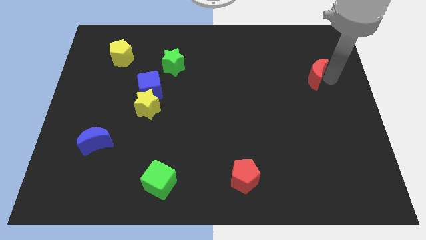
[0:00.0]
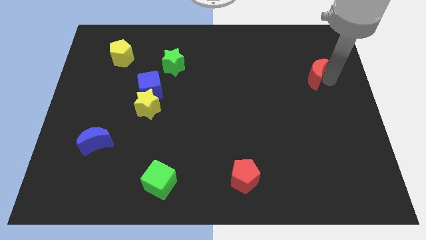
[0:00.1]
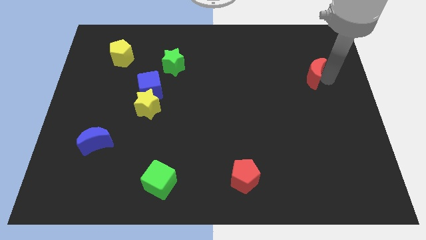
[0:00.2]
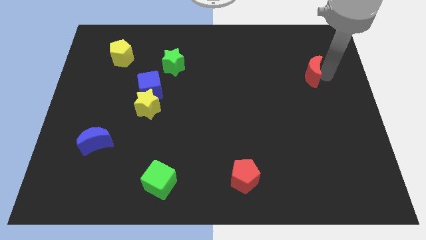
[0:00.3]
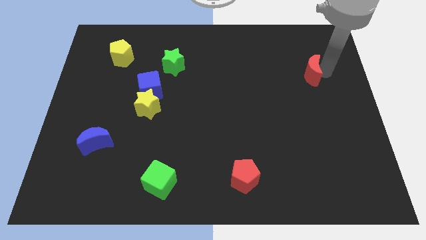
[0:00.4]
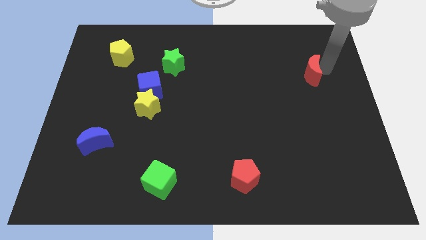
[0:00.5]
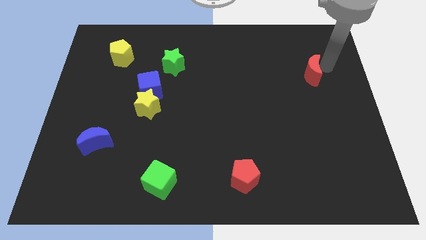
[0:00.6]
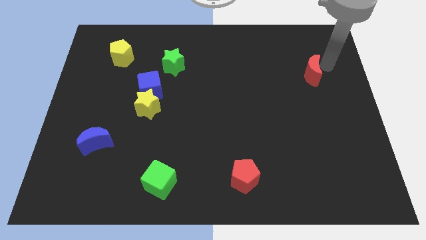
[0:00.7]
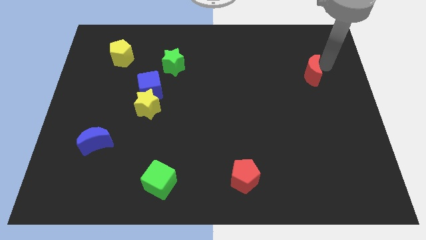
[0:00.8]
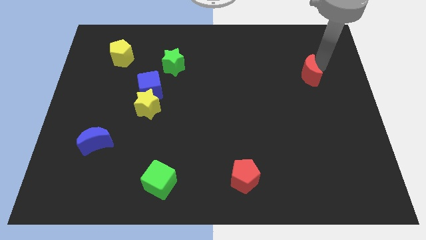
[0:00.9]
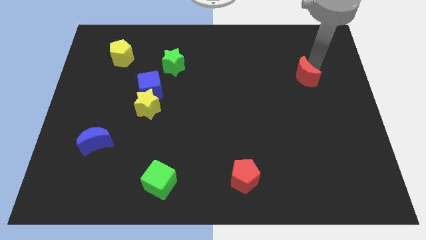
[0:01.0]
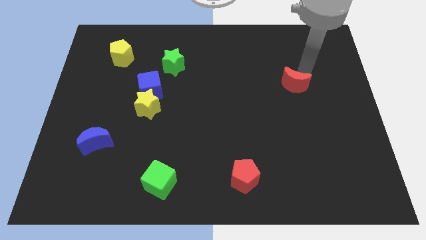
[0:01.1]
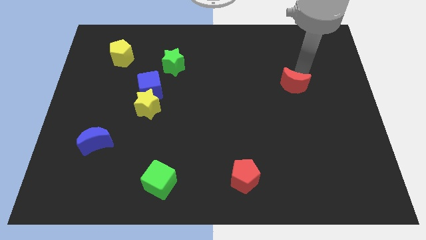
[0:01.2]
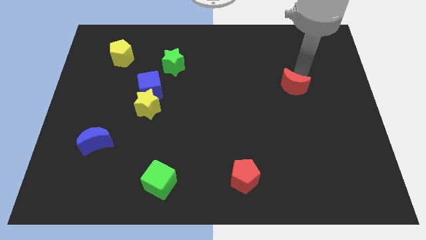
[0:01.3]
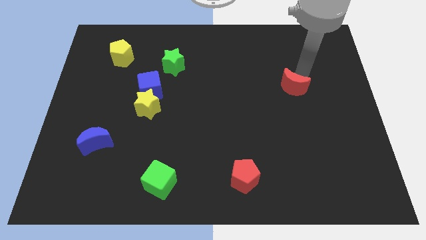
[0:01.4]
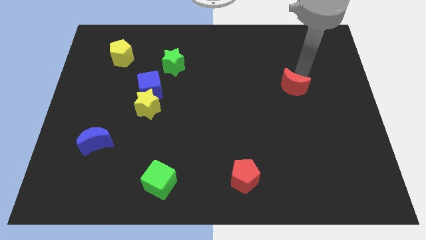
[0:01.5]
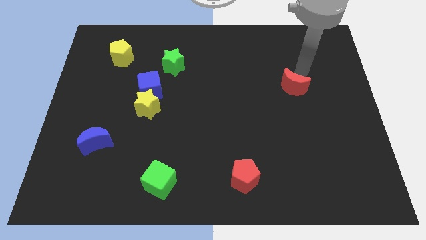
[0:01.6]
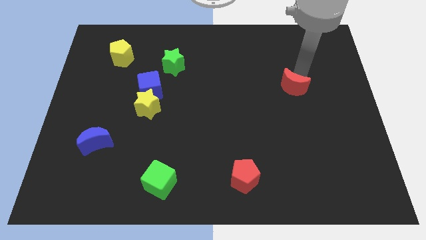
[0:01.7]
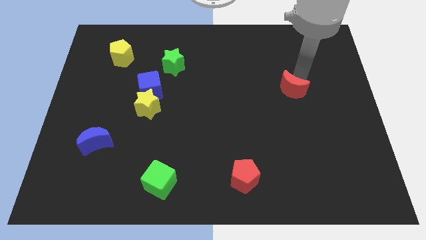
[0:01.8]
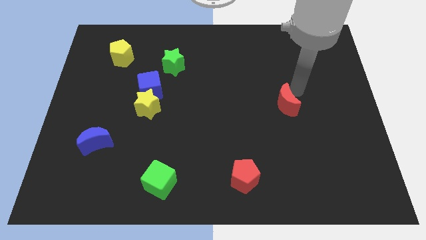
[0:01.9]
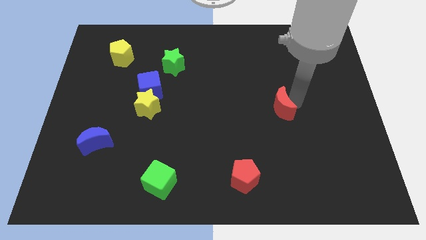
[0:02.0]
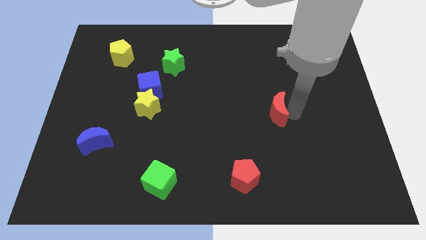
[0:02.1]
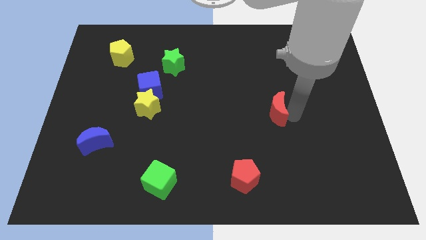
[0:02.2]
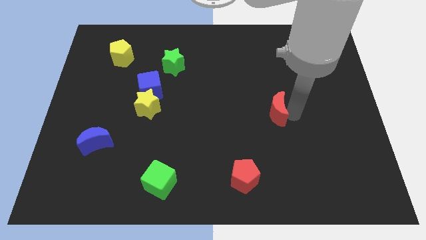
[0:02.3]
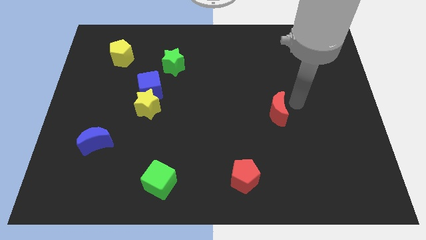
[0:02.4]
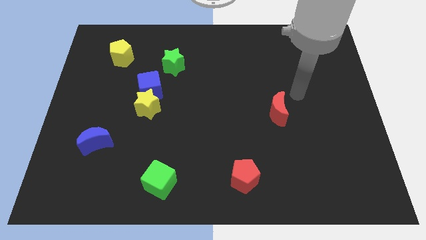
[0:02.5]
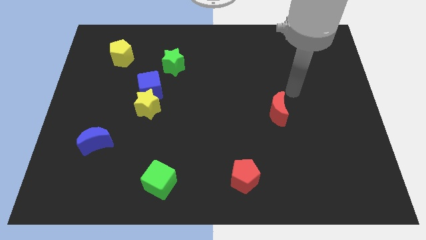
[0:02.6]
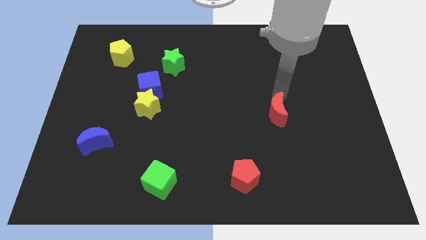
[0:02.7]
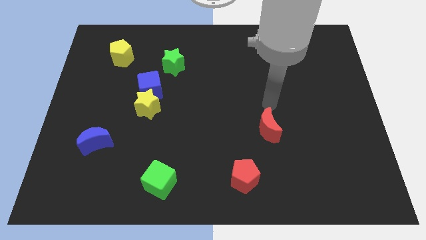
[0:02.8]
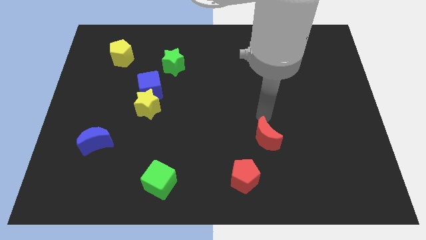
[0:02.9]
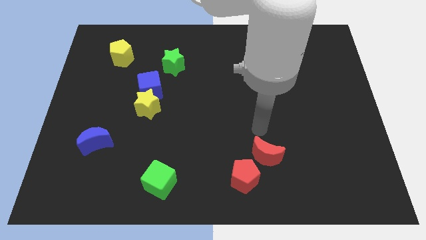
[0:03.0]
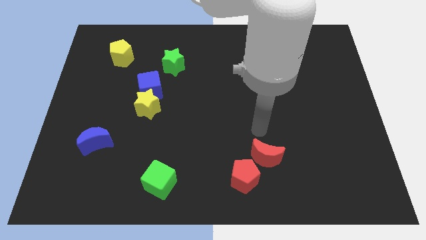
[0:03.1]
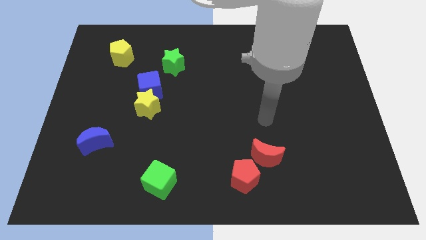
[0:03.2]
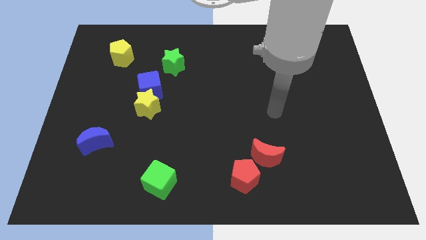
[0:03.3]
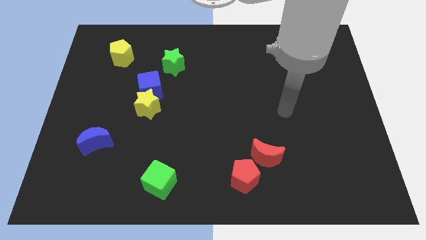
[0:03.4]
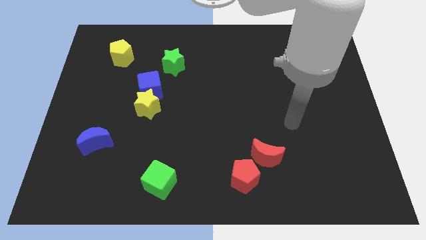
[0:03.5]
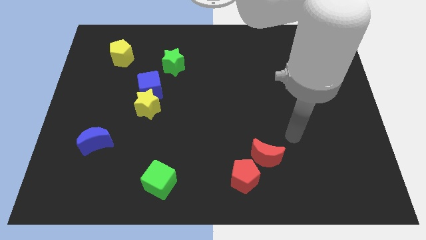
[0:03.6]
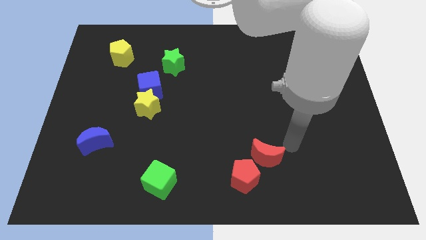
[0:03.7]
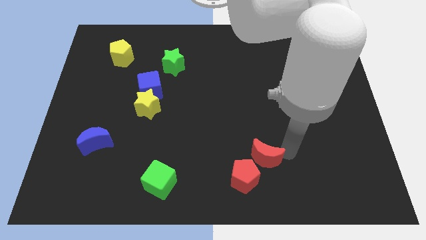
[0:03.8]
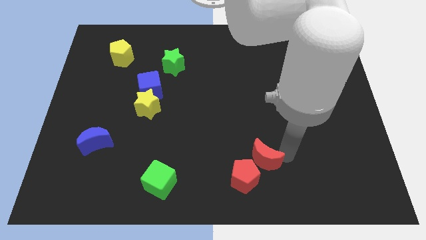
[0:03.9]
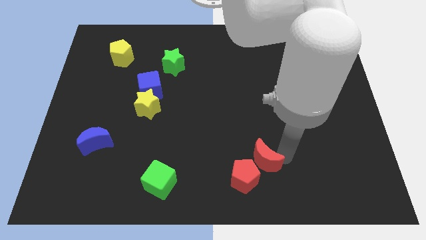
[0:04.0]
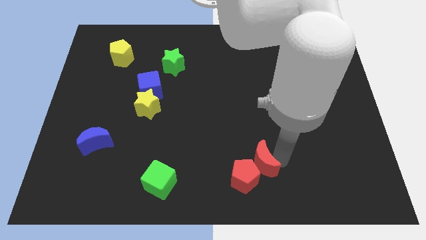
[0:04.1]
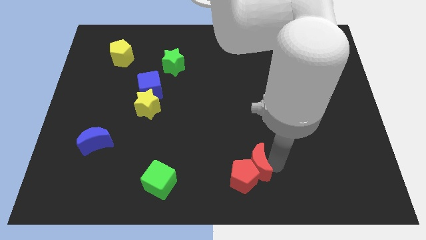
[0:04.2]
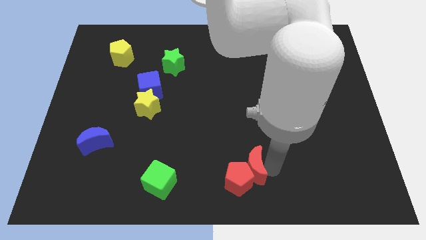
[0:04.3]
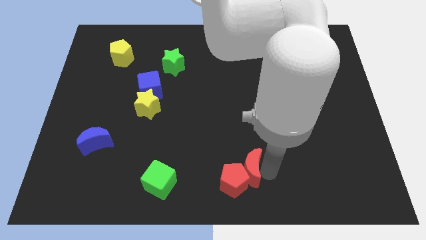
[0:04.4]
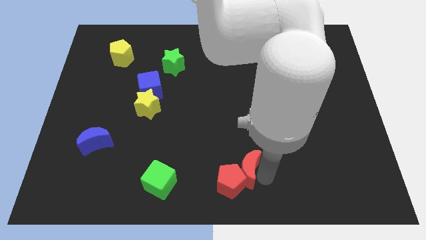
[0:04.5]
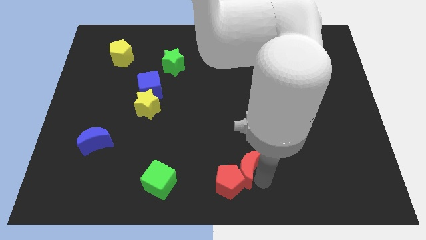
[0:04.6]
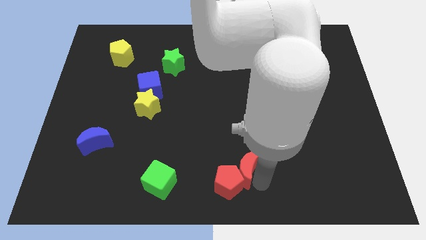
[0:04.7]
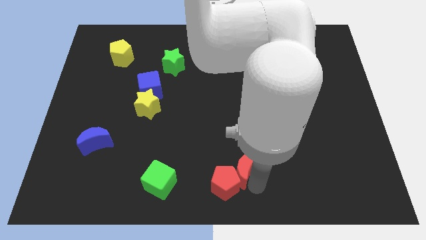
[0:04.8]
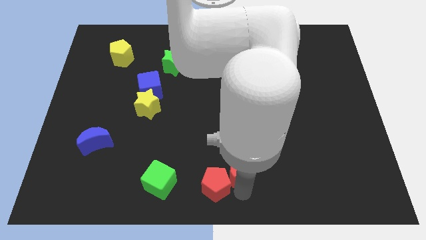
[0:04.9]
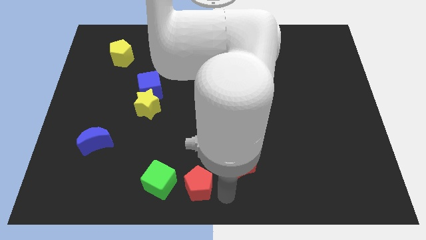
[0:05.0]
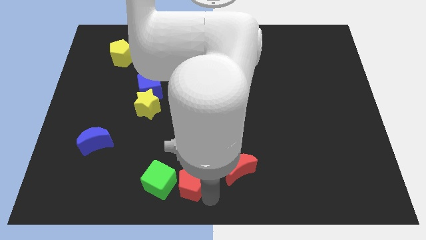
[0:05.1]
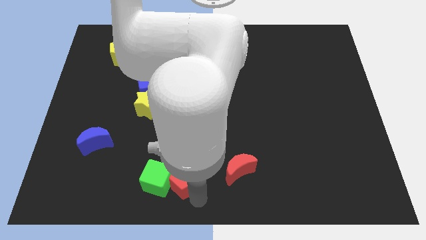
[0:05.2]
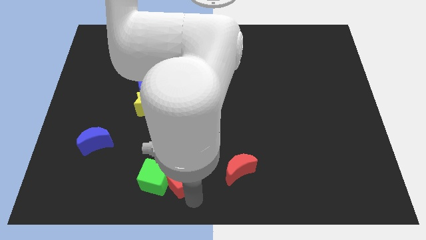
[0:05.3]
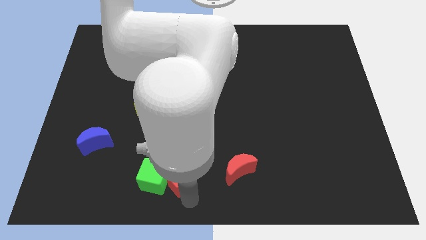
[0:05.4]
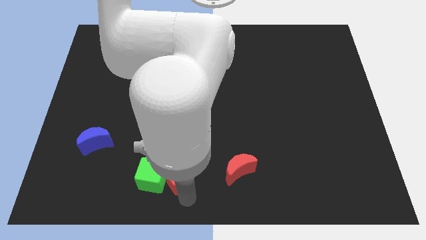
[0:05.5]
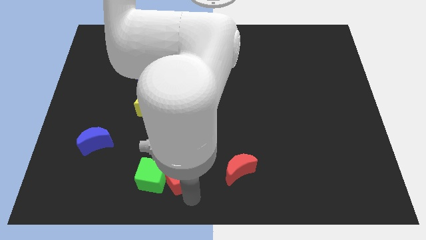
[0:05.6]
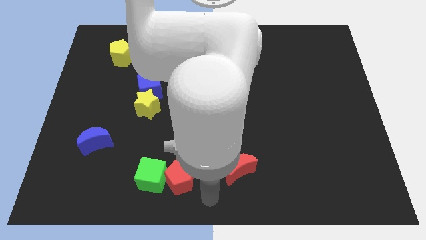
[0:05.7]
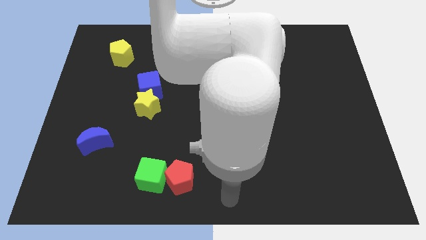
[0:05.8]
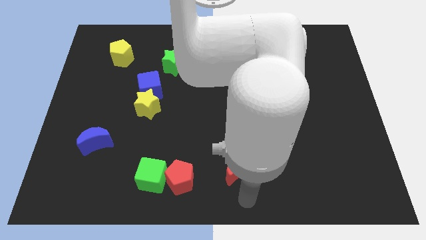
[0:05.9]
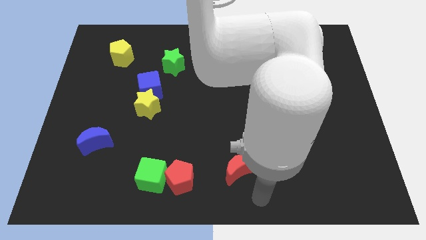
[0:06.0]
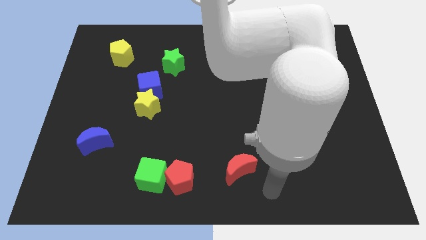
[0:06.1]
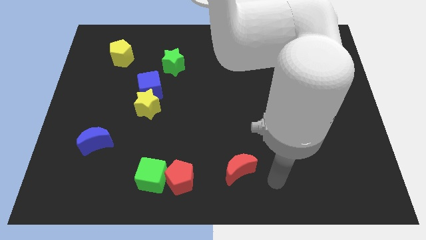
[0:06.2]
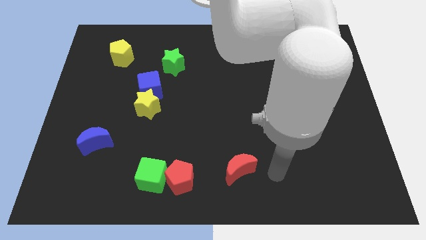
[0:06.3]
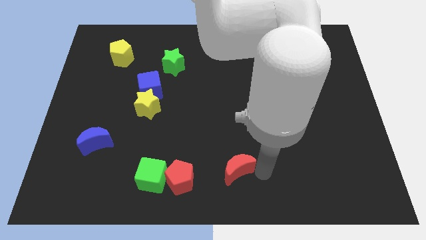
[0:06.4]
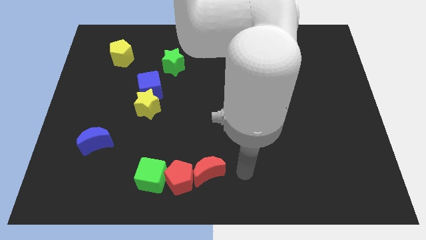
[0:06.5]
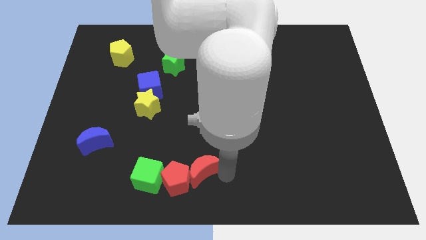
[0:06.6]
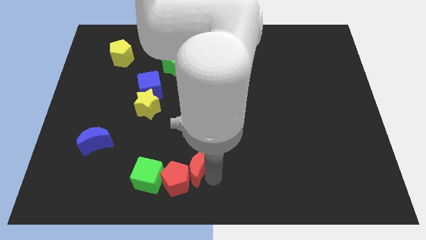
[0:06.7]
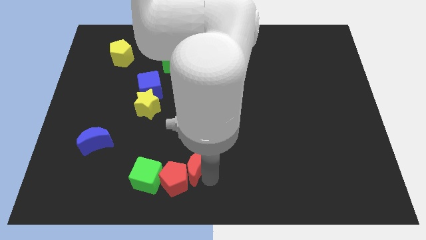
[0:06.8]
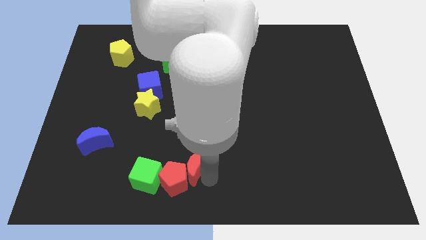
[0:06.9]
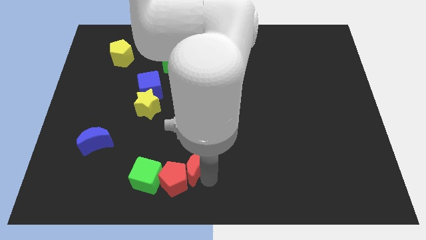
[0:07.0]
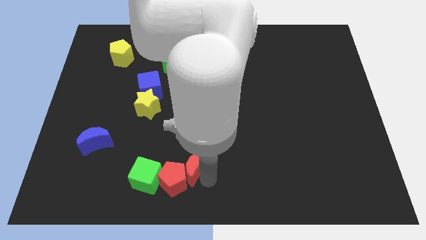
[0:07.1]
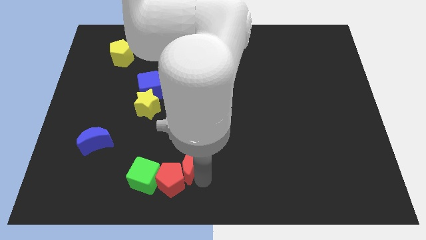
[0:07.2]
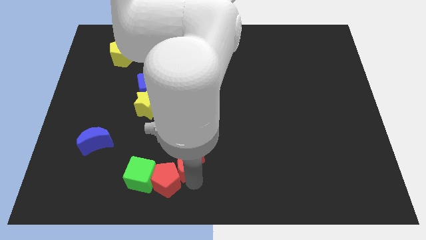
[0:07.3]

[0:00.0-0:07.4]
push the red crescent into the red pentagon

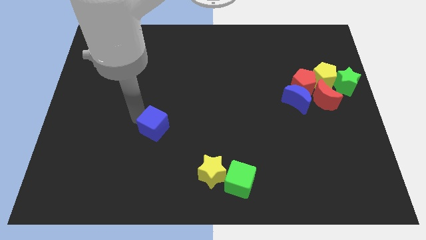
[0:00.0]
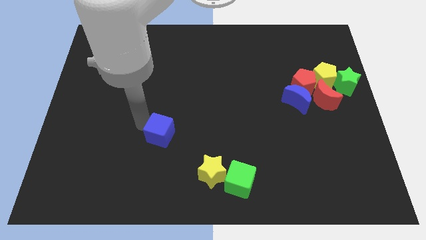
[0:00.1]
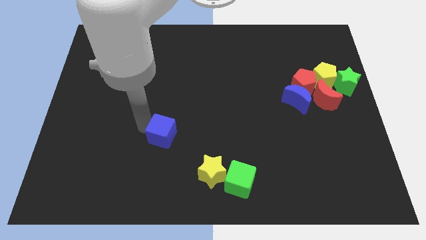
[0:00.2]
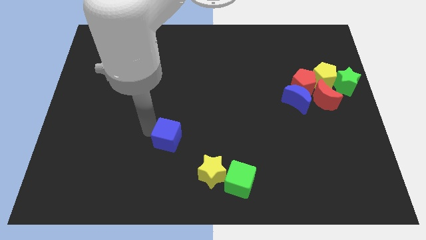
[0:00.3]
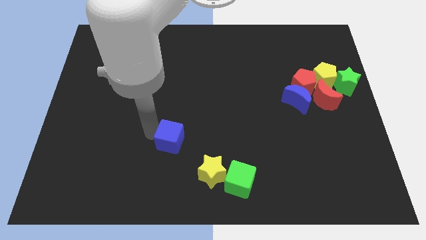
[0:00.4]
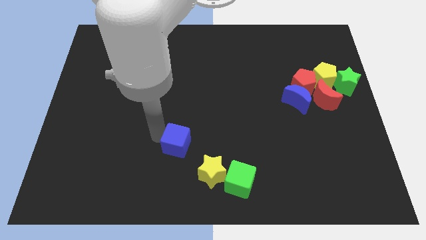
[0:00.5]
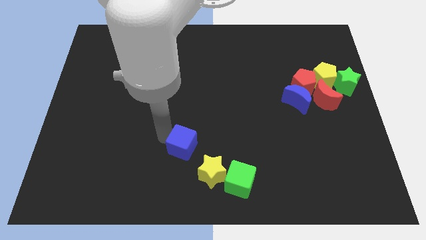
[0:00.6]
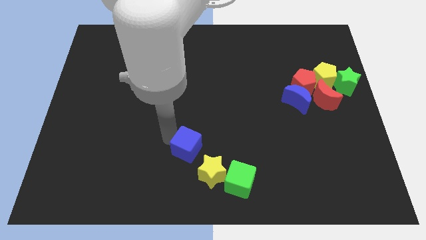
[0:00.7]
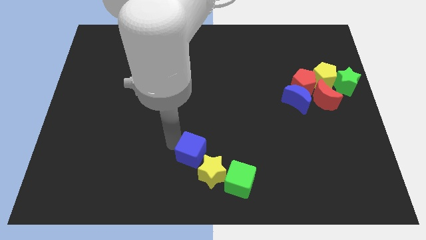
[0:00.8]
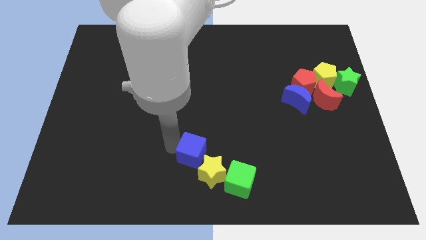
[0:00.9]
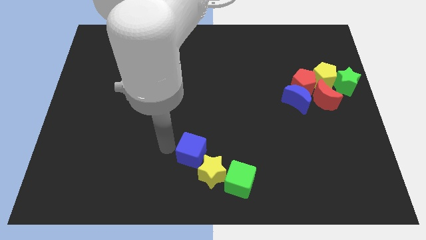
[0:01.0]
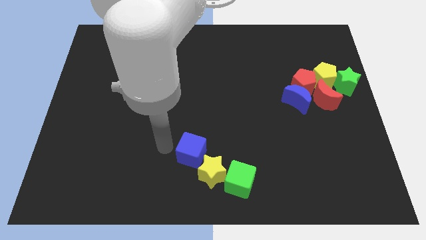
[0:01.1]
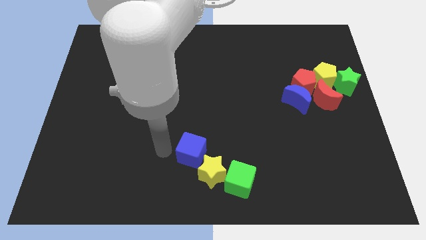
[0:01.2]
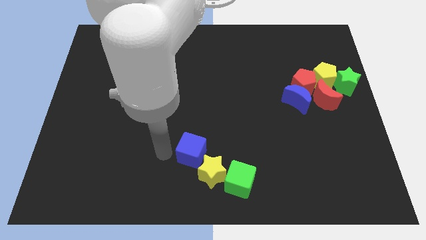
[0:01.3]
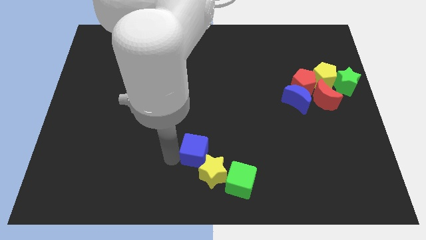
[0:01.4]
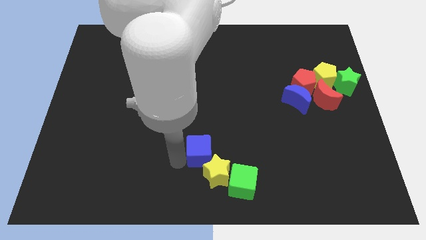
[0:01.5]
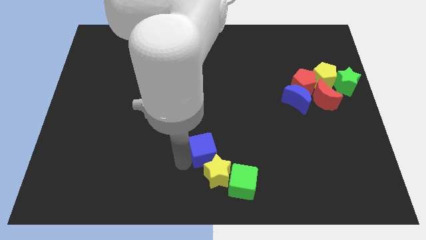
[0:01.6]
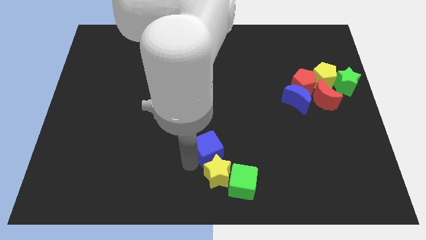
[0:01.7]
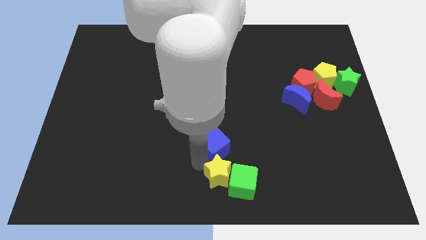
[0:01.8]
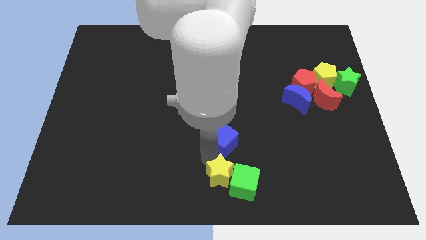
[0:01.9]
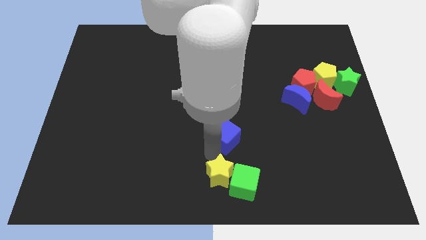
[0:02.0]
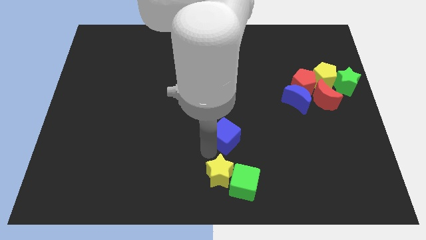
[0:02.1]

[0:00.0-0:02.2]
place blue cube above yellow star
